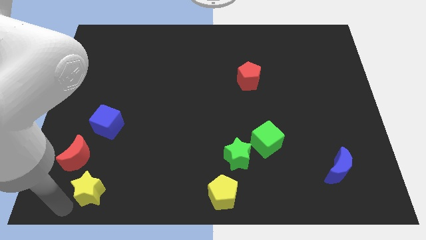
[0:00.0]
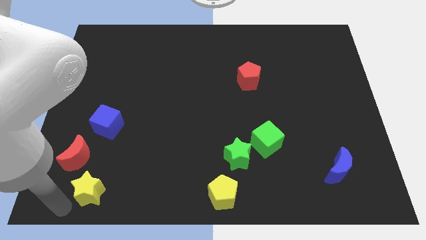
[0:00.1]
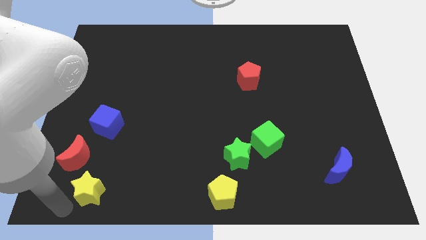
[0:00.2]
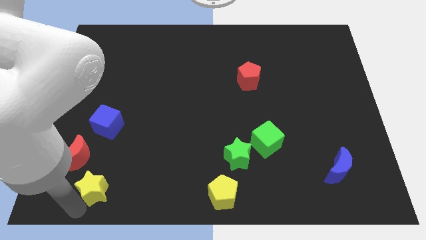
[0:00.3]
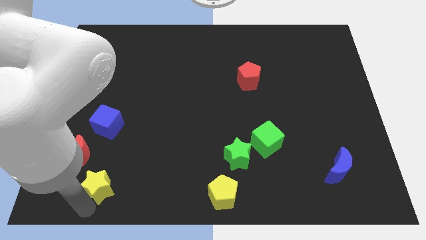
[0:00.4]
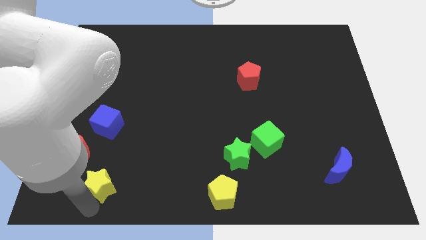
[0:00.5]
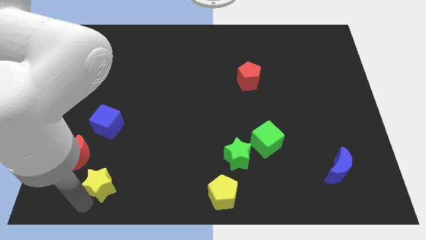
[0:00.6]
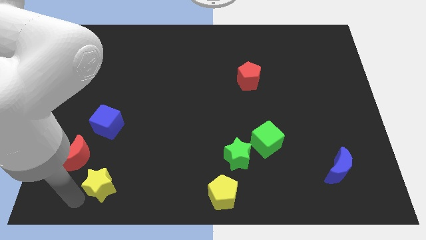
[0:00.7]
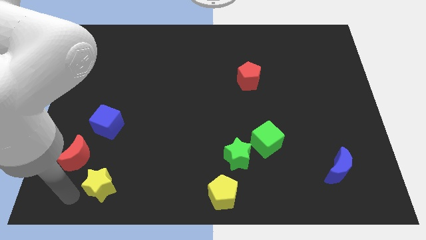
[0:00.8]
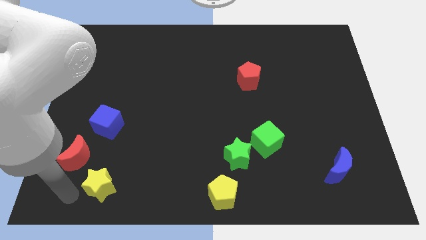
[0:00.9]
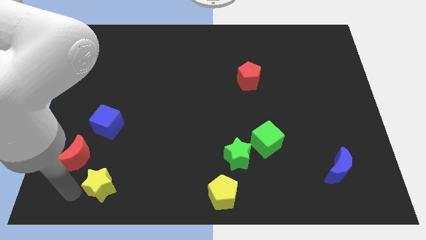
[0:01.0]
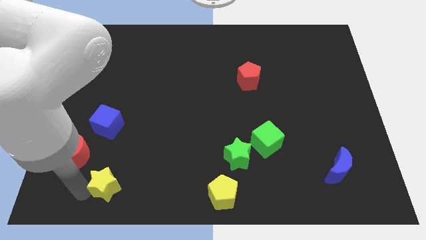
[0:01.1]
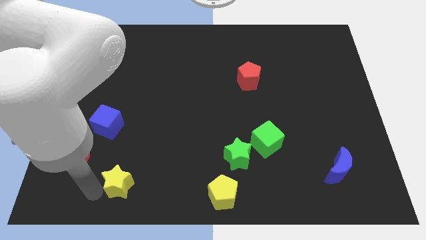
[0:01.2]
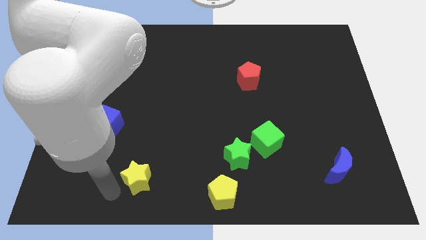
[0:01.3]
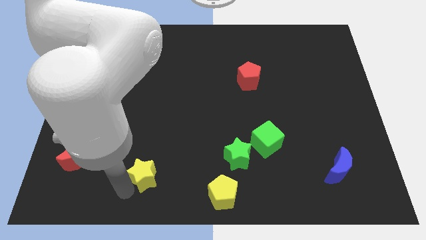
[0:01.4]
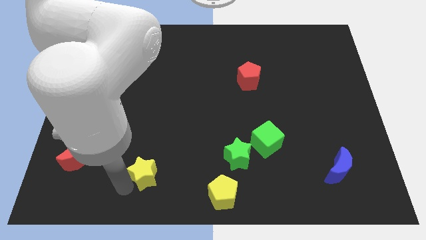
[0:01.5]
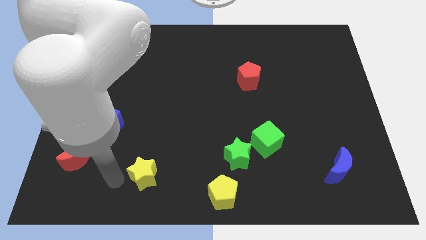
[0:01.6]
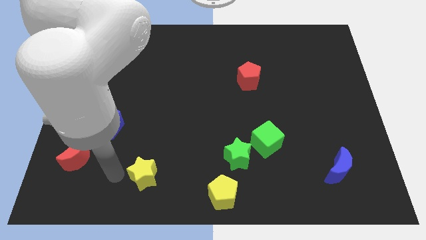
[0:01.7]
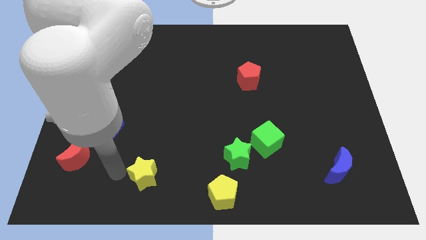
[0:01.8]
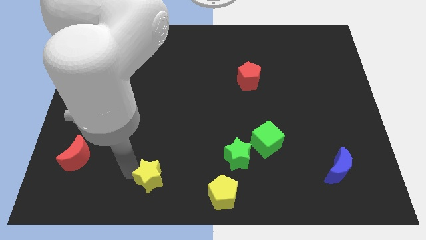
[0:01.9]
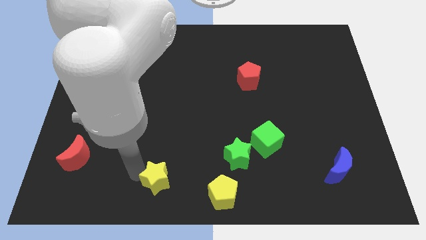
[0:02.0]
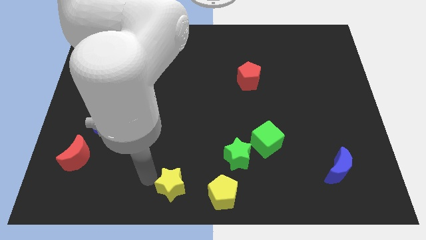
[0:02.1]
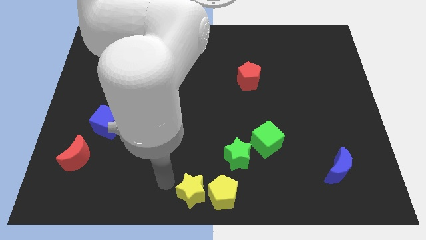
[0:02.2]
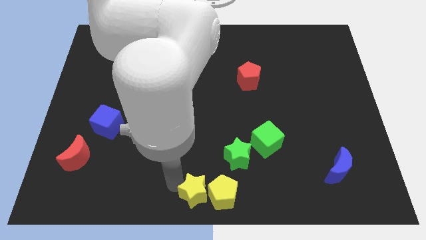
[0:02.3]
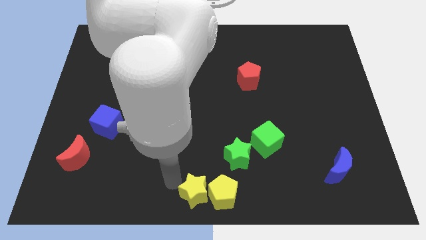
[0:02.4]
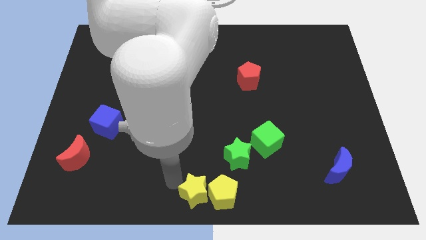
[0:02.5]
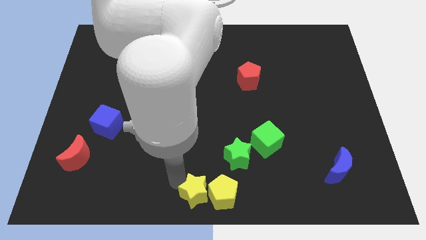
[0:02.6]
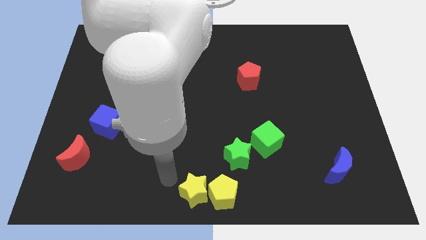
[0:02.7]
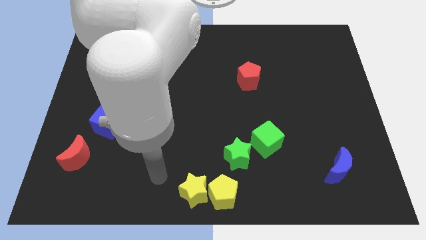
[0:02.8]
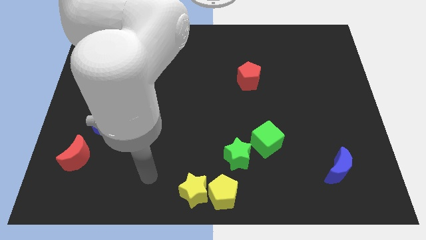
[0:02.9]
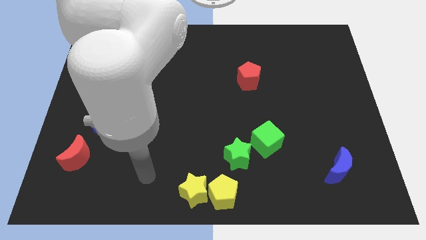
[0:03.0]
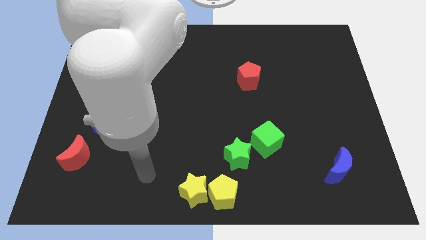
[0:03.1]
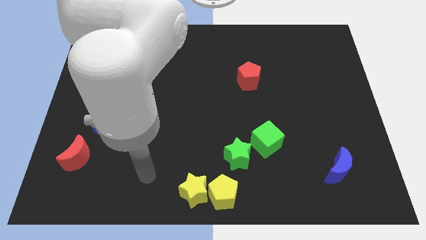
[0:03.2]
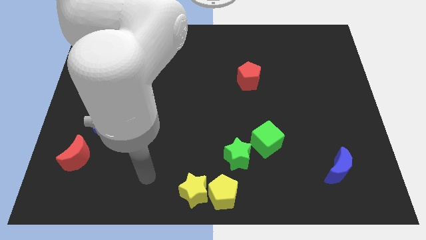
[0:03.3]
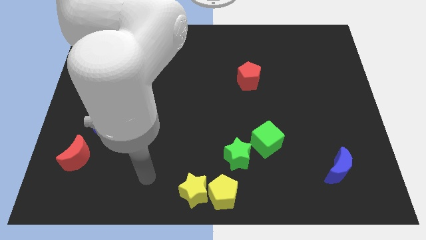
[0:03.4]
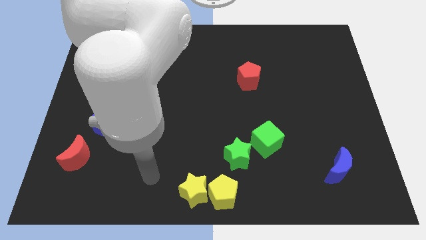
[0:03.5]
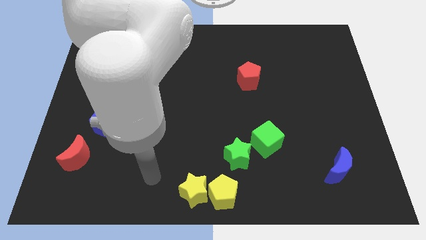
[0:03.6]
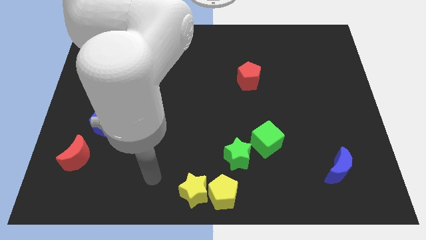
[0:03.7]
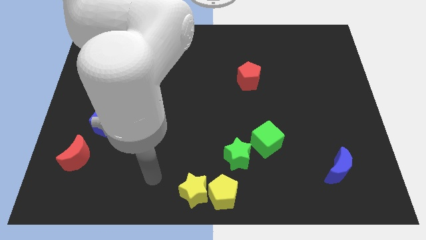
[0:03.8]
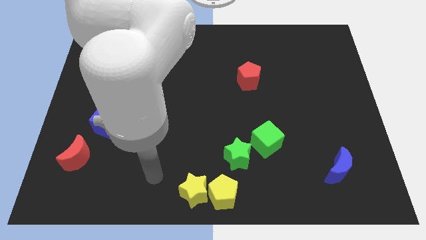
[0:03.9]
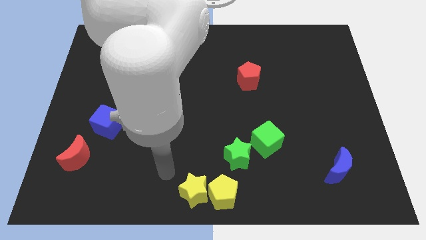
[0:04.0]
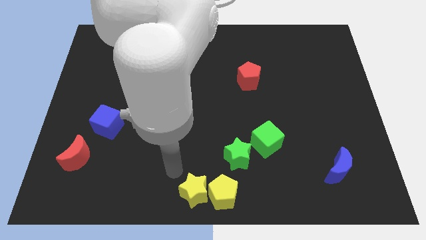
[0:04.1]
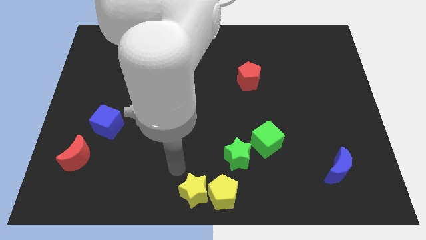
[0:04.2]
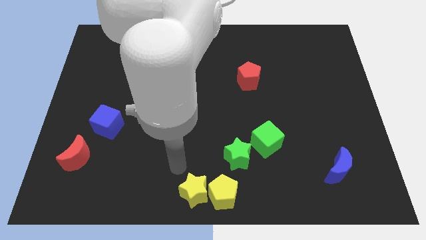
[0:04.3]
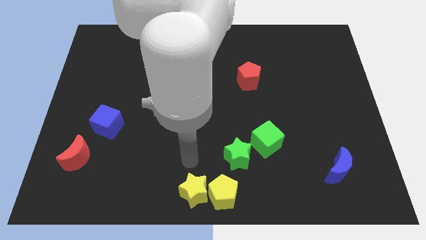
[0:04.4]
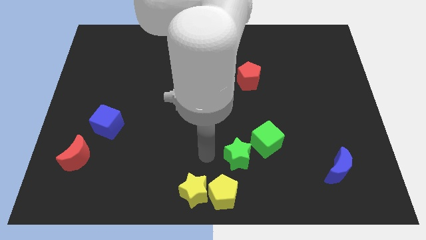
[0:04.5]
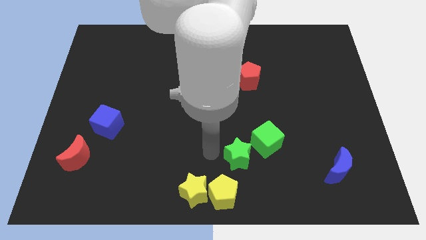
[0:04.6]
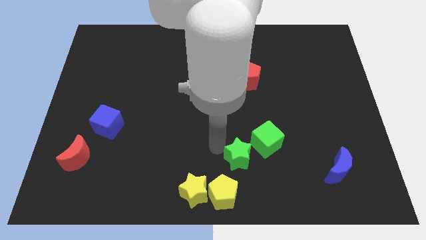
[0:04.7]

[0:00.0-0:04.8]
put the yellow star on the left side of the yellow pentagon

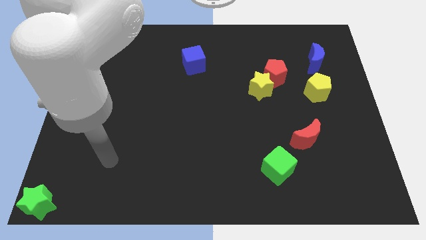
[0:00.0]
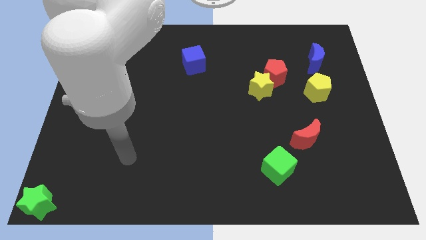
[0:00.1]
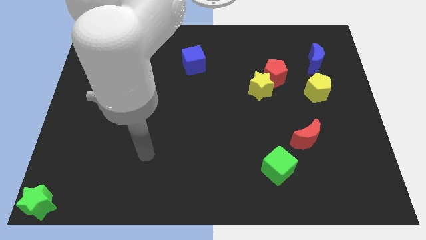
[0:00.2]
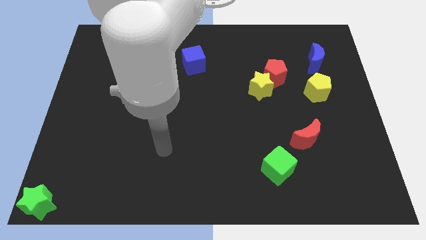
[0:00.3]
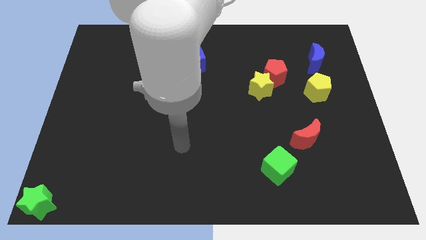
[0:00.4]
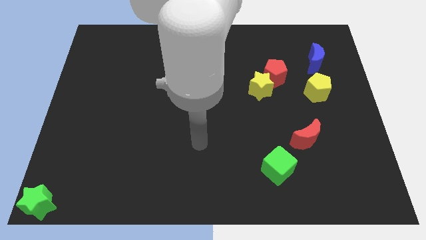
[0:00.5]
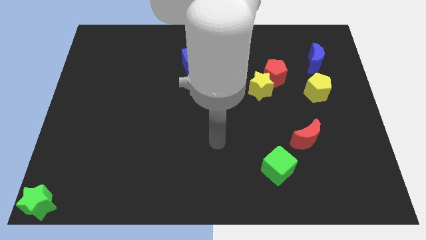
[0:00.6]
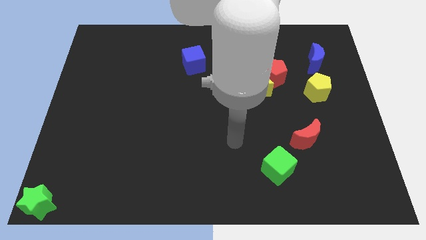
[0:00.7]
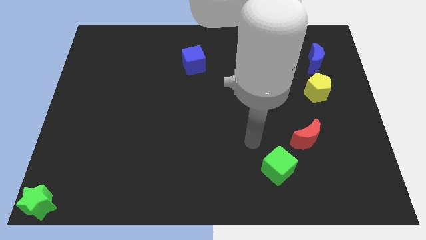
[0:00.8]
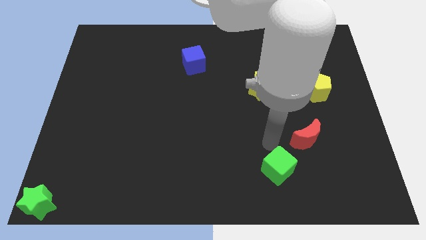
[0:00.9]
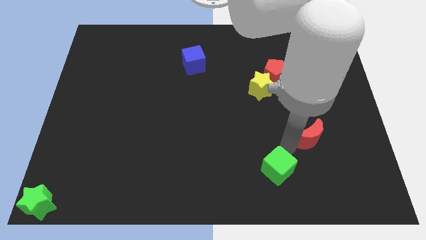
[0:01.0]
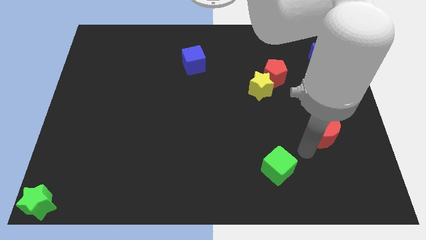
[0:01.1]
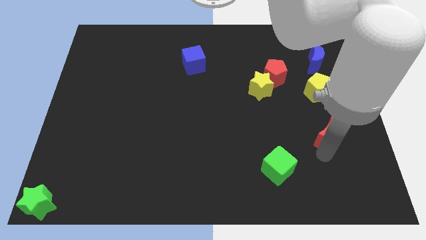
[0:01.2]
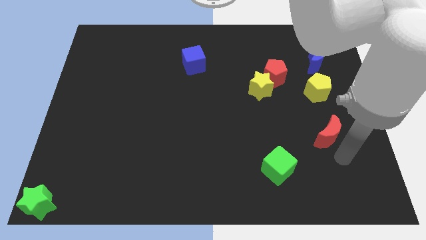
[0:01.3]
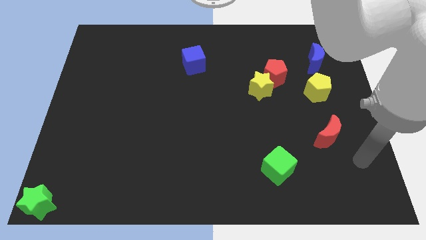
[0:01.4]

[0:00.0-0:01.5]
move the red moon slightly to the right

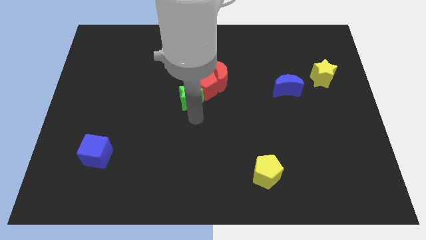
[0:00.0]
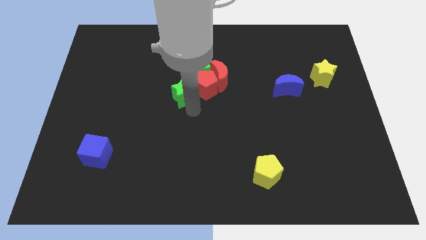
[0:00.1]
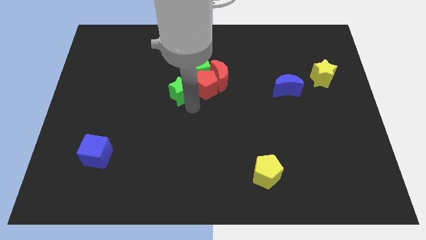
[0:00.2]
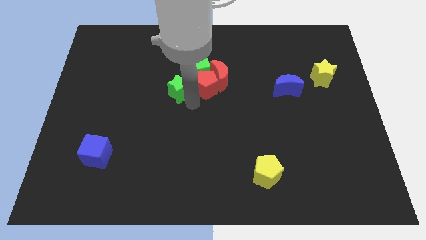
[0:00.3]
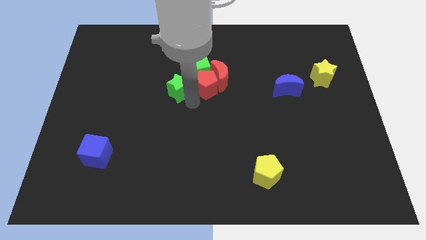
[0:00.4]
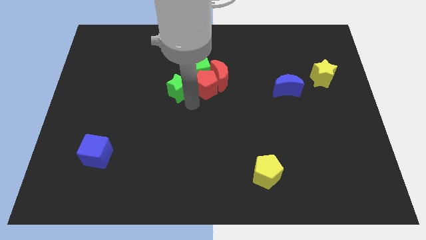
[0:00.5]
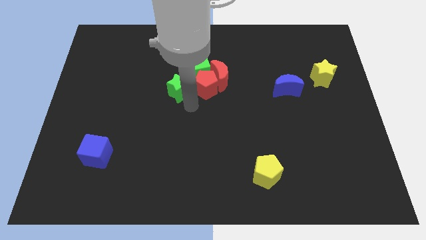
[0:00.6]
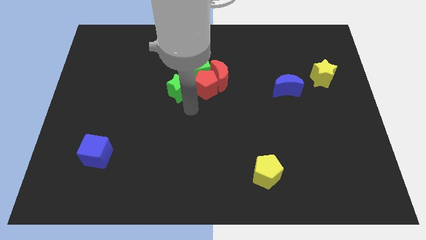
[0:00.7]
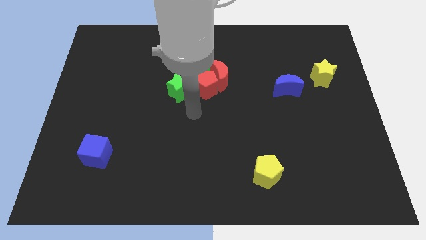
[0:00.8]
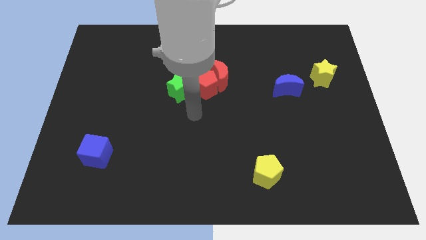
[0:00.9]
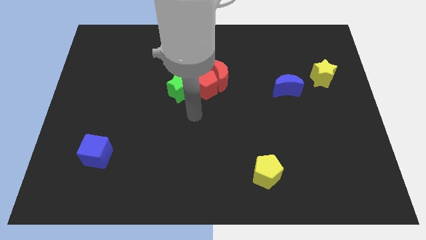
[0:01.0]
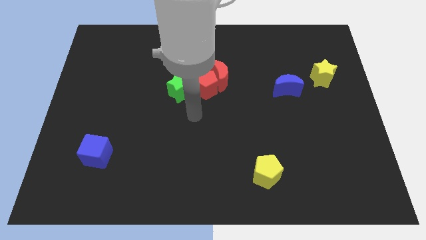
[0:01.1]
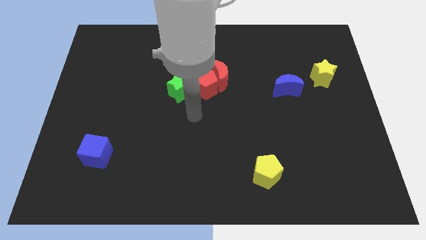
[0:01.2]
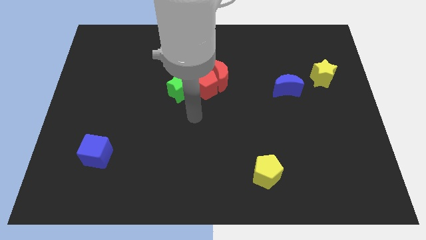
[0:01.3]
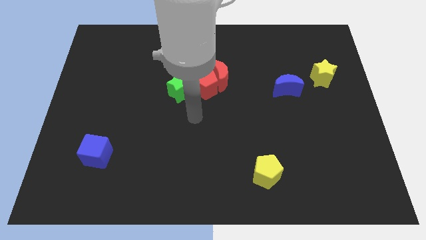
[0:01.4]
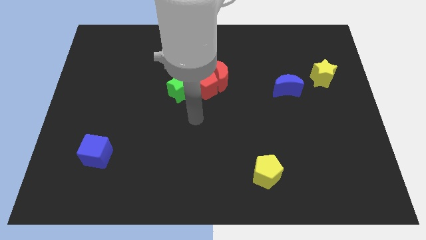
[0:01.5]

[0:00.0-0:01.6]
push the green star slightly upwards

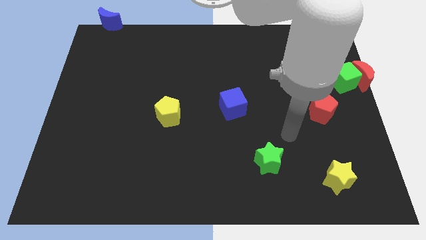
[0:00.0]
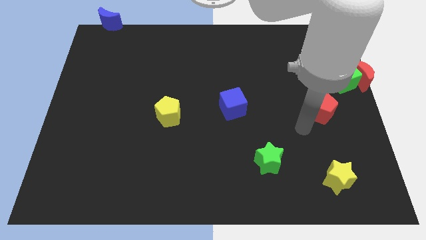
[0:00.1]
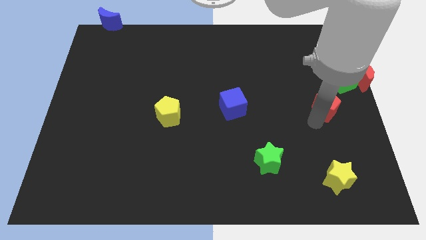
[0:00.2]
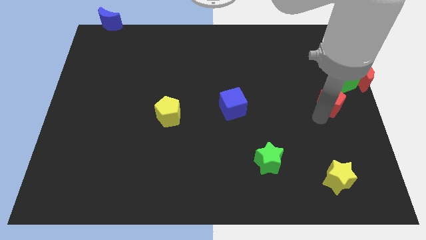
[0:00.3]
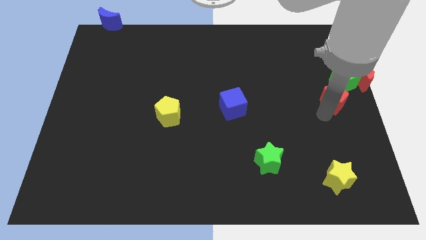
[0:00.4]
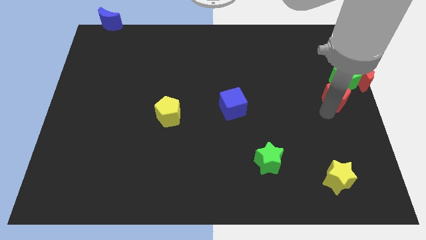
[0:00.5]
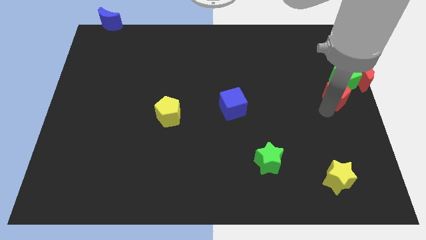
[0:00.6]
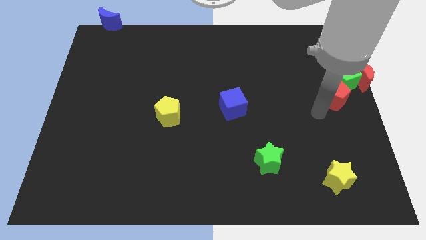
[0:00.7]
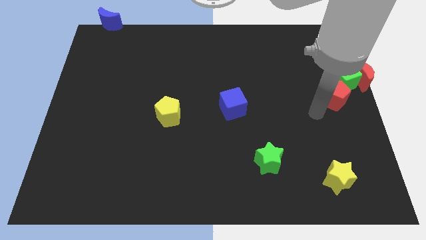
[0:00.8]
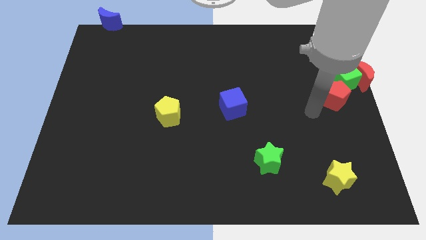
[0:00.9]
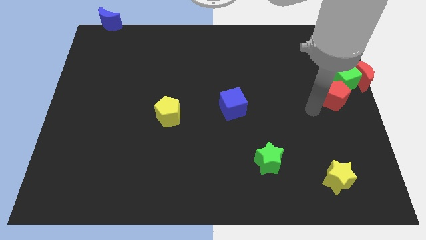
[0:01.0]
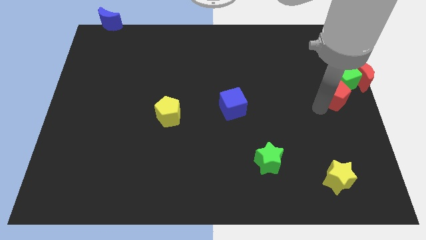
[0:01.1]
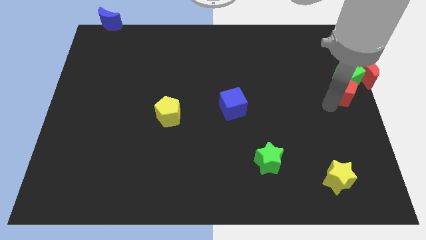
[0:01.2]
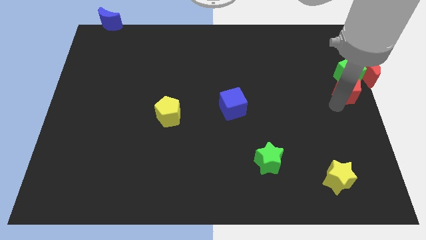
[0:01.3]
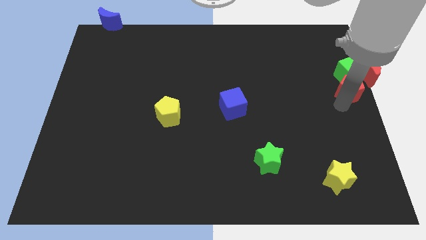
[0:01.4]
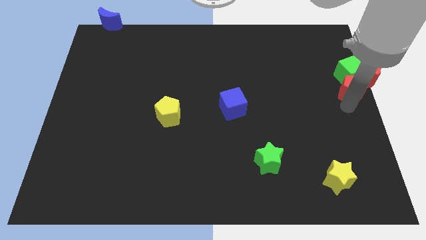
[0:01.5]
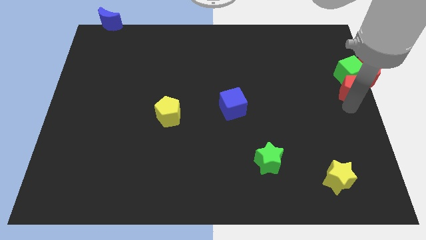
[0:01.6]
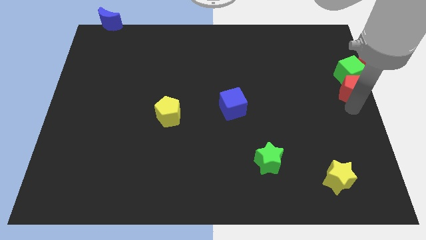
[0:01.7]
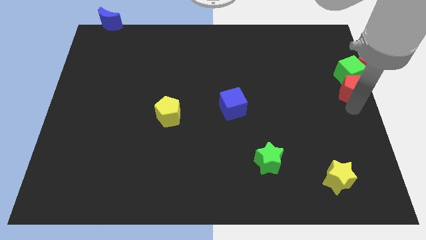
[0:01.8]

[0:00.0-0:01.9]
move the red pentagon into the green cube
